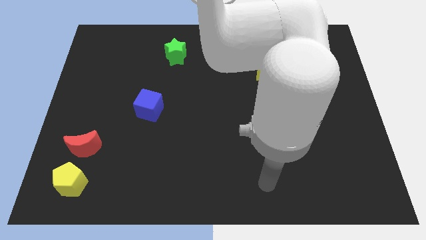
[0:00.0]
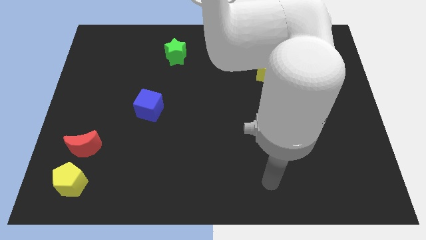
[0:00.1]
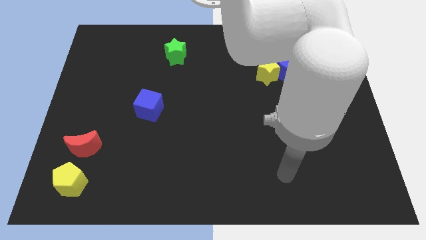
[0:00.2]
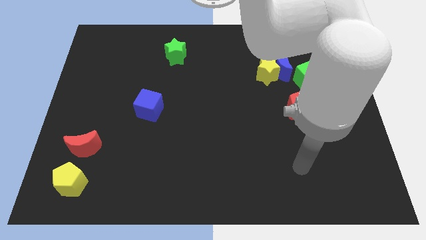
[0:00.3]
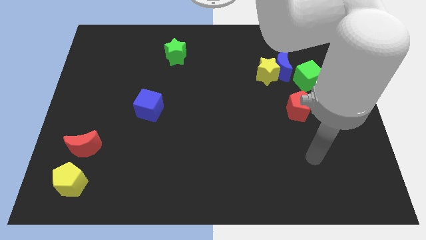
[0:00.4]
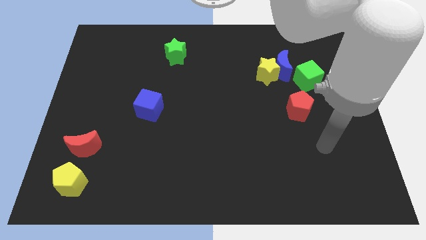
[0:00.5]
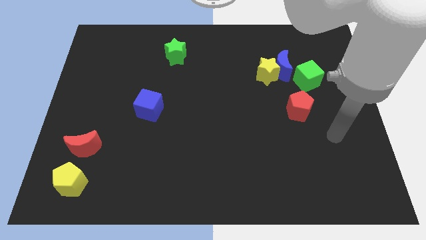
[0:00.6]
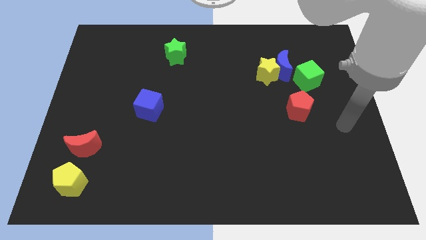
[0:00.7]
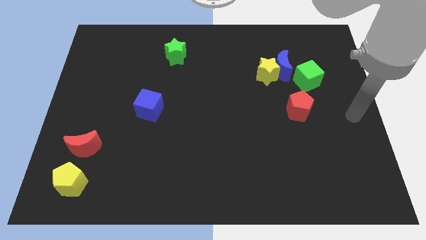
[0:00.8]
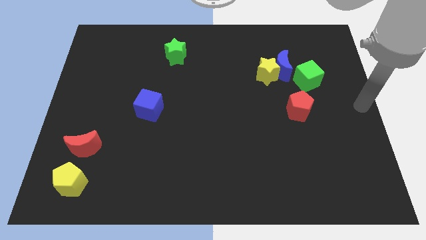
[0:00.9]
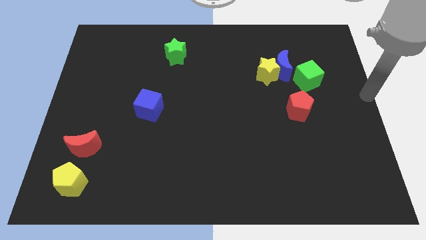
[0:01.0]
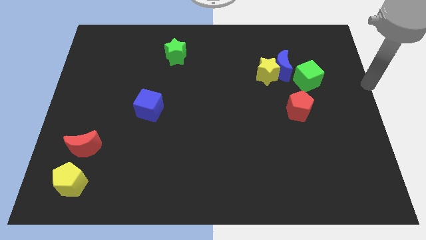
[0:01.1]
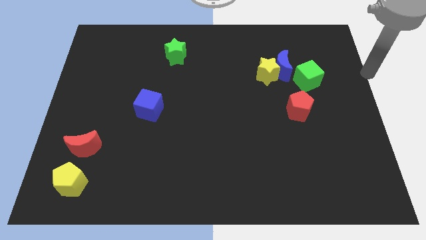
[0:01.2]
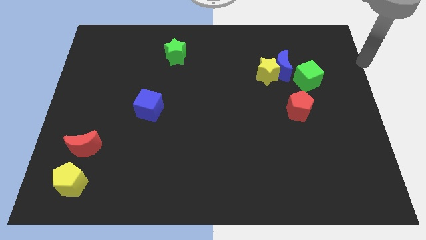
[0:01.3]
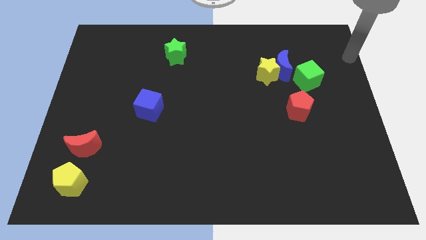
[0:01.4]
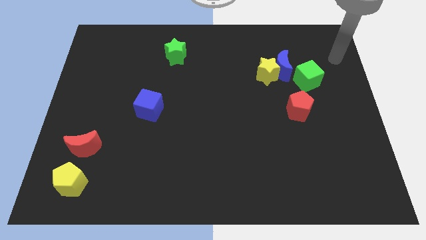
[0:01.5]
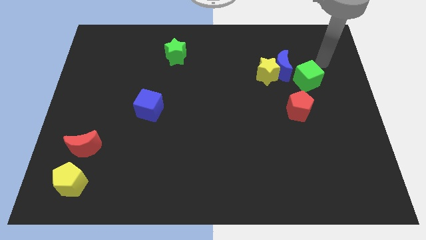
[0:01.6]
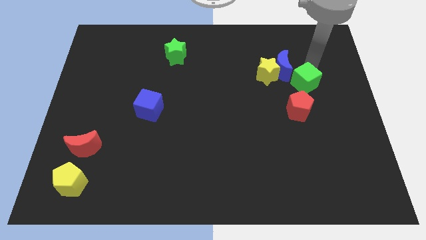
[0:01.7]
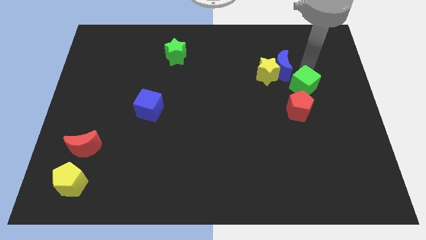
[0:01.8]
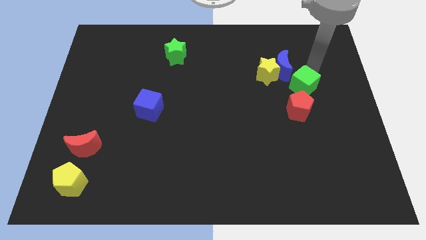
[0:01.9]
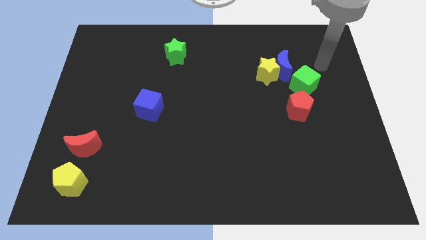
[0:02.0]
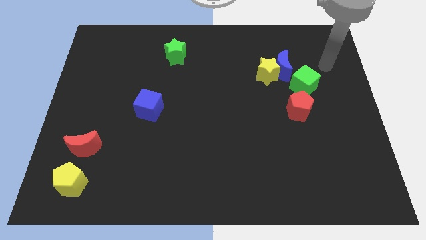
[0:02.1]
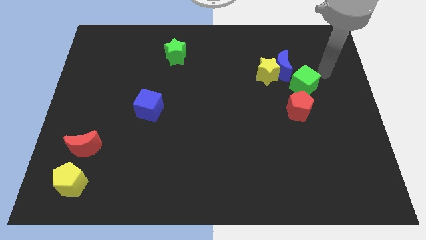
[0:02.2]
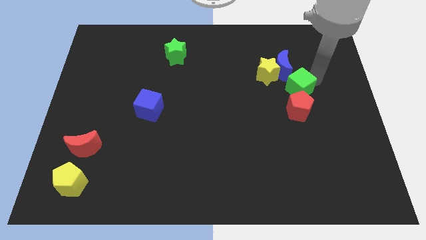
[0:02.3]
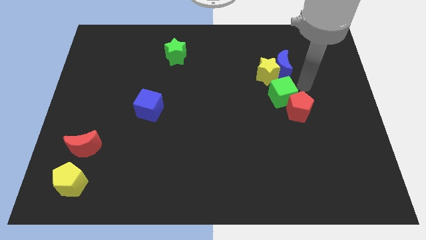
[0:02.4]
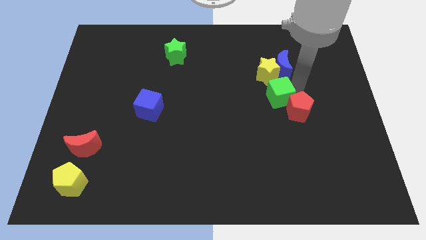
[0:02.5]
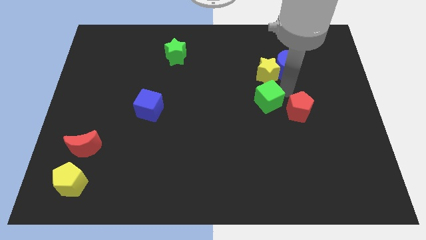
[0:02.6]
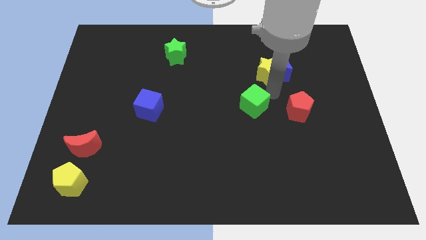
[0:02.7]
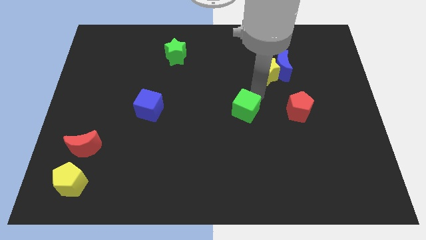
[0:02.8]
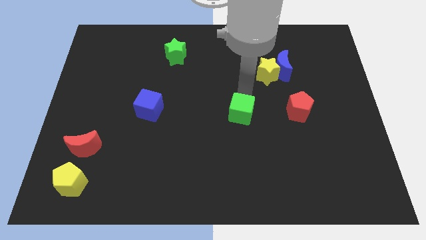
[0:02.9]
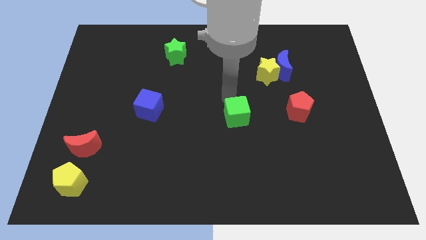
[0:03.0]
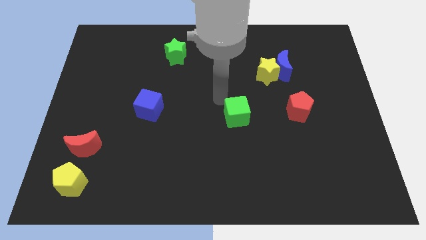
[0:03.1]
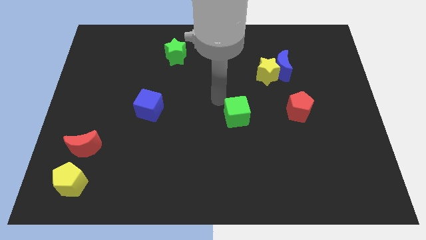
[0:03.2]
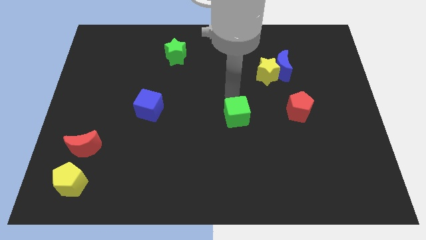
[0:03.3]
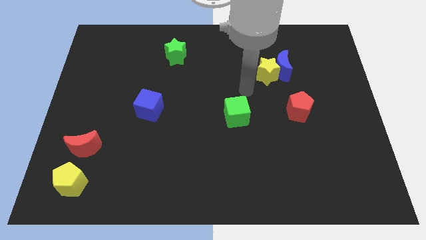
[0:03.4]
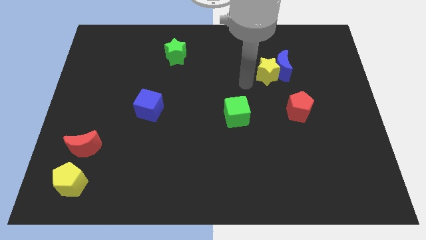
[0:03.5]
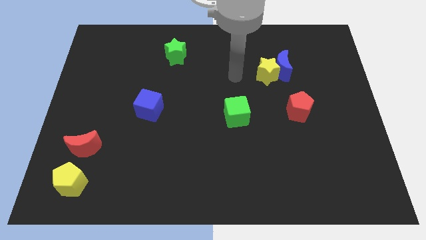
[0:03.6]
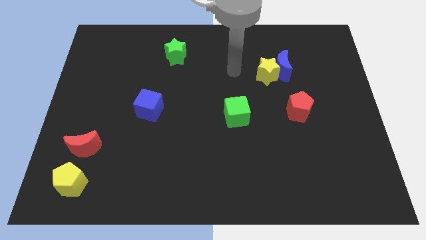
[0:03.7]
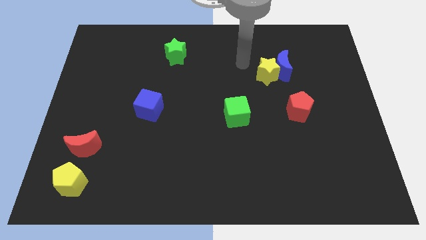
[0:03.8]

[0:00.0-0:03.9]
push the green cube to the center of the board

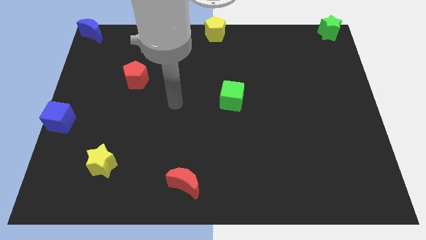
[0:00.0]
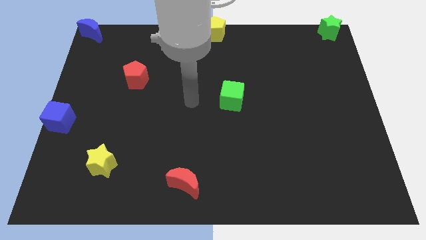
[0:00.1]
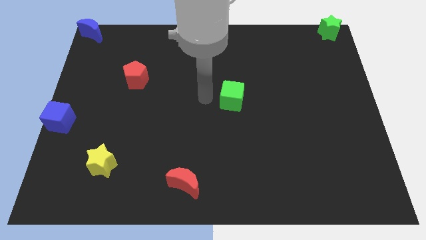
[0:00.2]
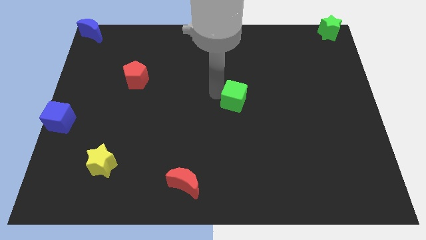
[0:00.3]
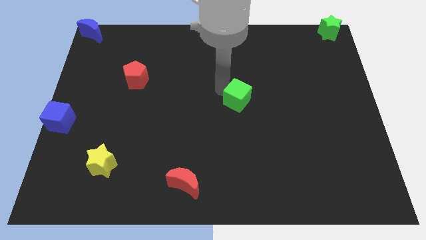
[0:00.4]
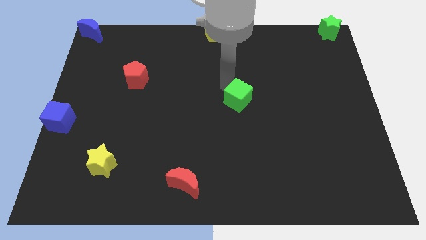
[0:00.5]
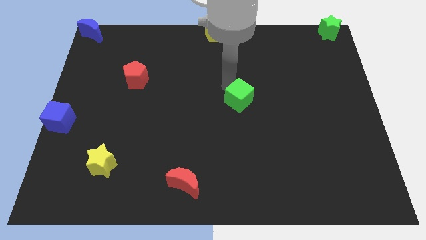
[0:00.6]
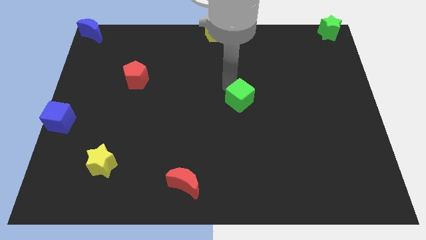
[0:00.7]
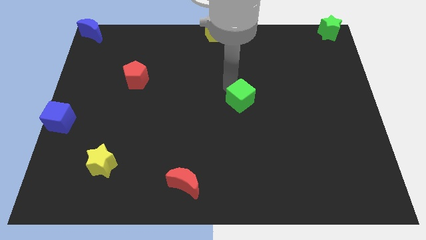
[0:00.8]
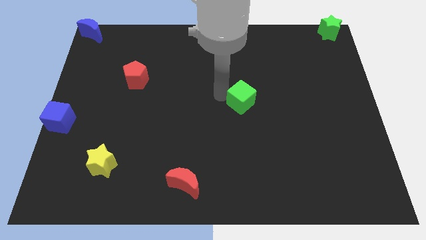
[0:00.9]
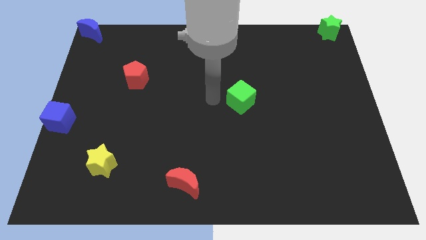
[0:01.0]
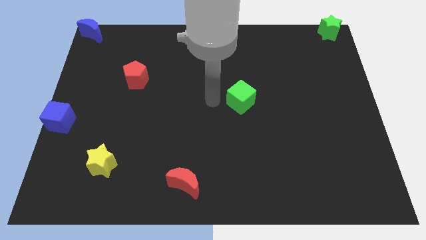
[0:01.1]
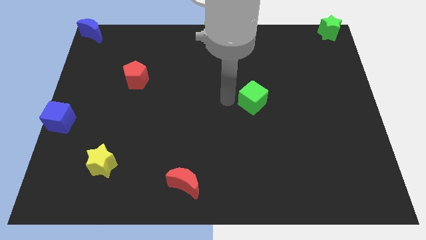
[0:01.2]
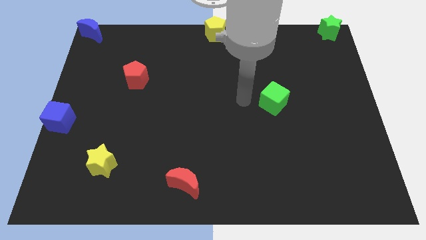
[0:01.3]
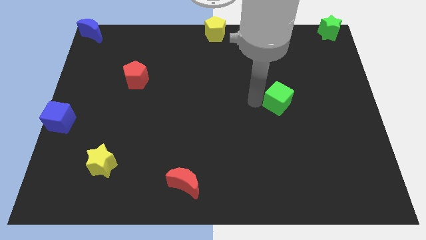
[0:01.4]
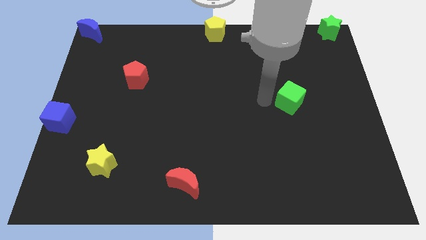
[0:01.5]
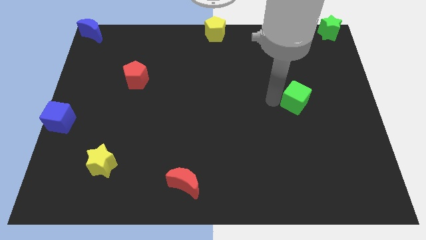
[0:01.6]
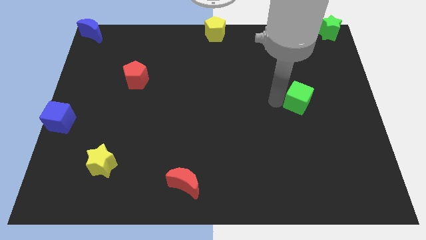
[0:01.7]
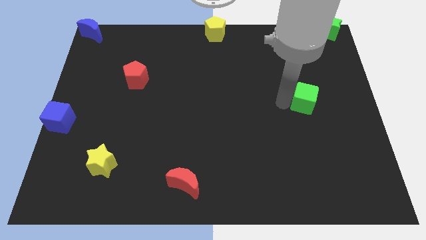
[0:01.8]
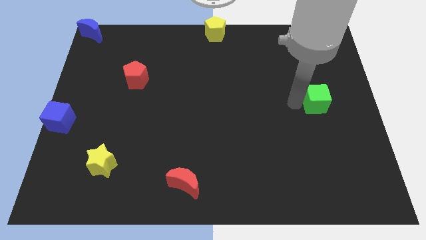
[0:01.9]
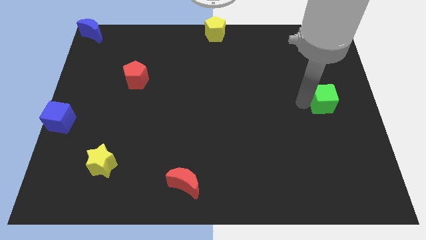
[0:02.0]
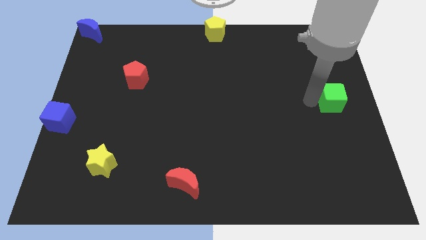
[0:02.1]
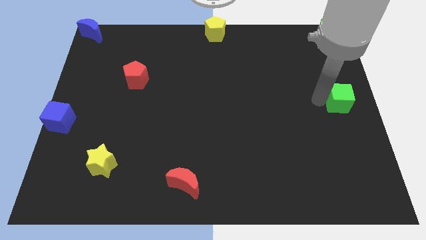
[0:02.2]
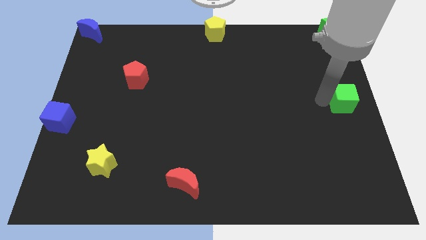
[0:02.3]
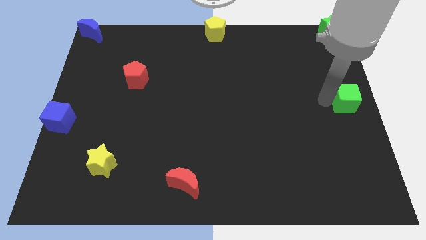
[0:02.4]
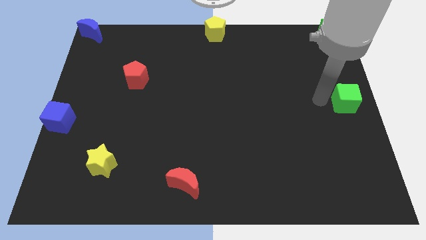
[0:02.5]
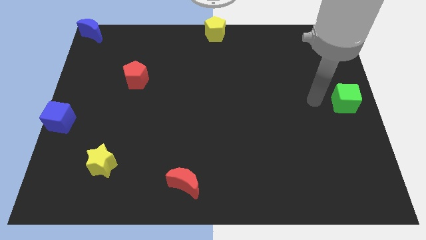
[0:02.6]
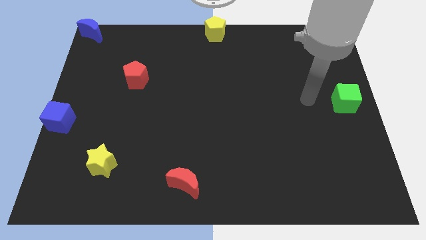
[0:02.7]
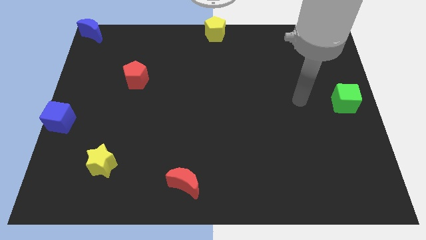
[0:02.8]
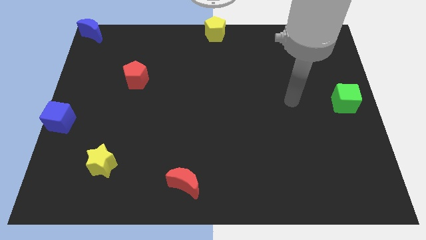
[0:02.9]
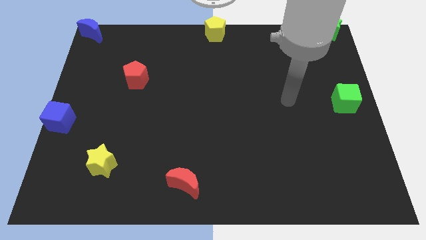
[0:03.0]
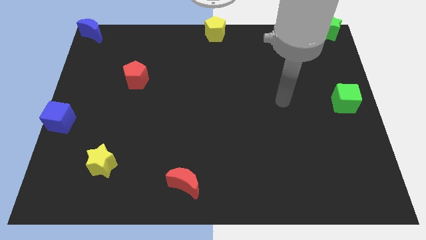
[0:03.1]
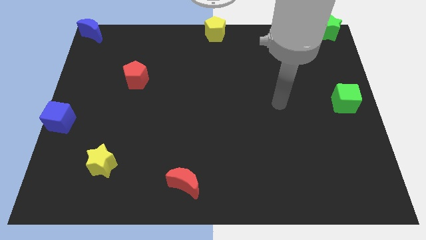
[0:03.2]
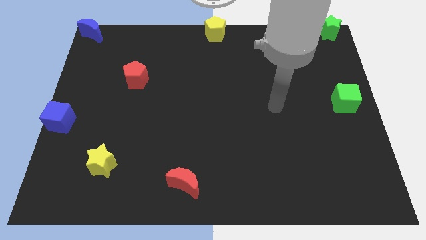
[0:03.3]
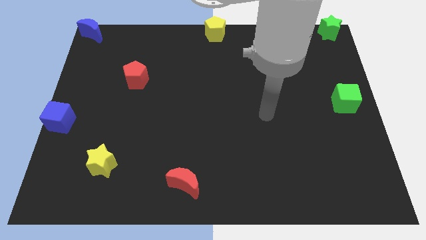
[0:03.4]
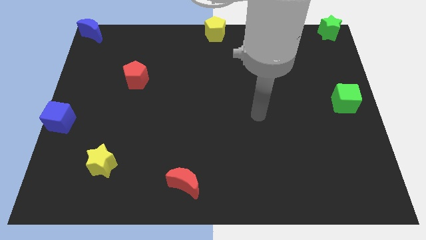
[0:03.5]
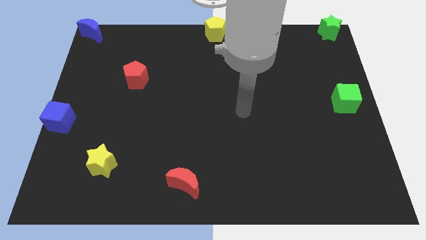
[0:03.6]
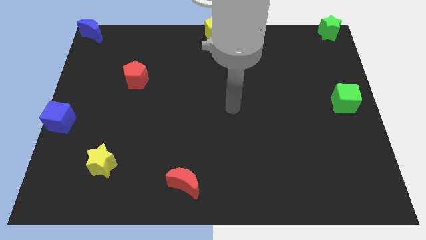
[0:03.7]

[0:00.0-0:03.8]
place the green cube below the green star

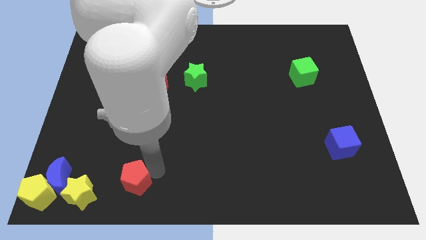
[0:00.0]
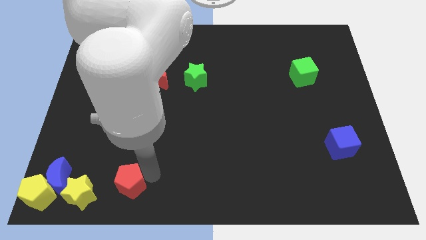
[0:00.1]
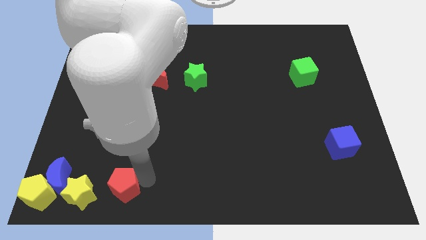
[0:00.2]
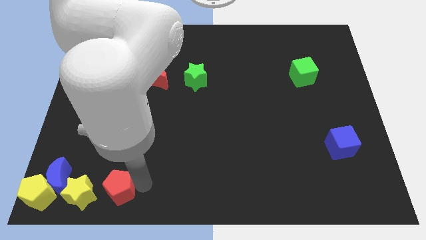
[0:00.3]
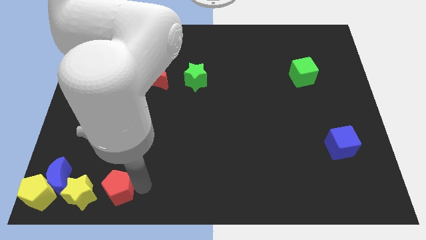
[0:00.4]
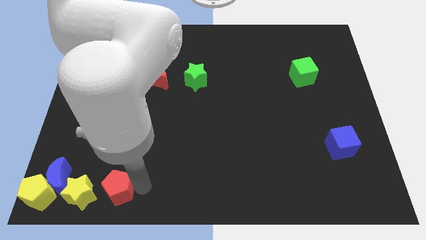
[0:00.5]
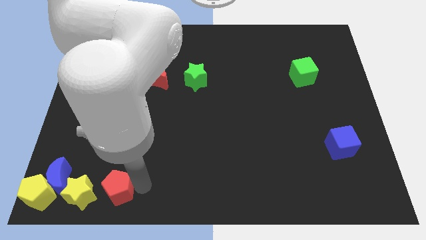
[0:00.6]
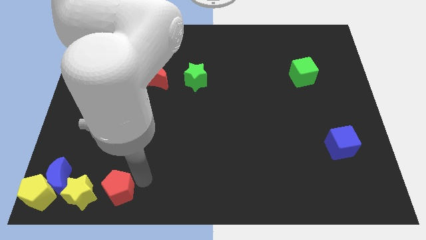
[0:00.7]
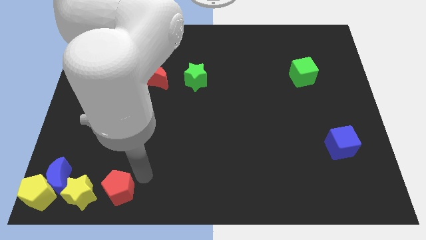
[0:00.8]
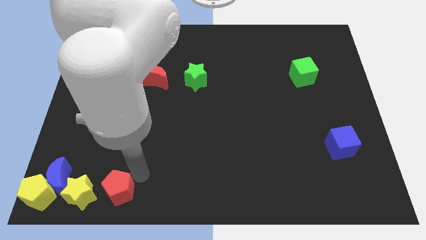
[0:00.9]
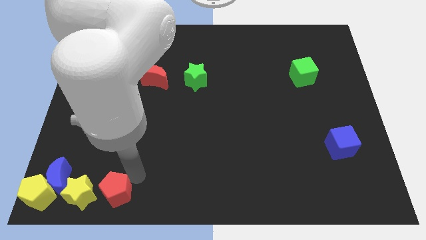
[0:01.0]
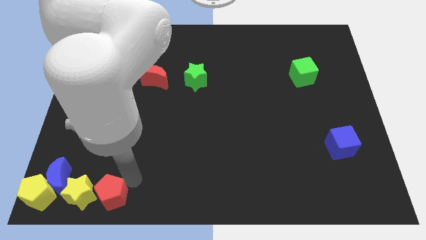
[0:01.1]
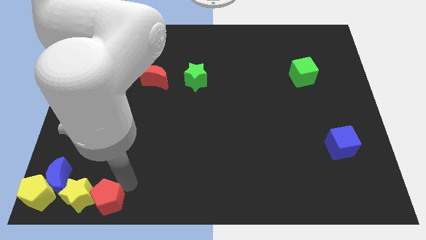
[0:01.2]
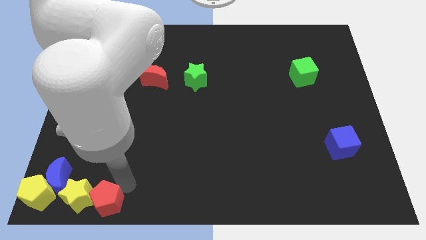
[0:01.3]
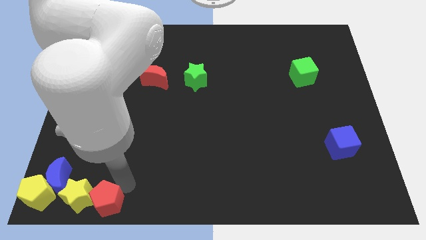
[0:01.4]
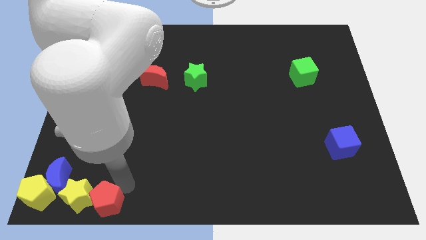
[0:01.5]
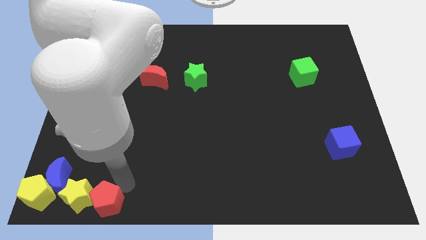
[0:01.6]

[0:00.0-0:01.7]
place the red pentagon into the right of the yellow star
